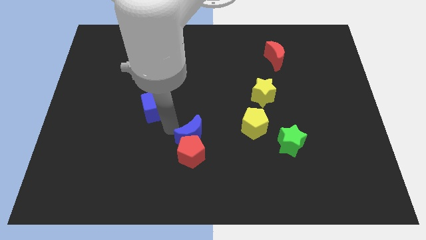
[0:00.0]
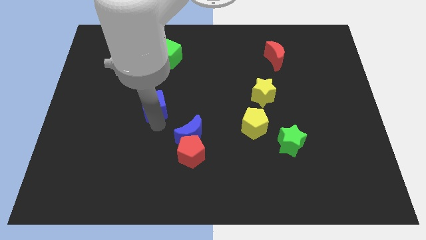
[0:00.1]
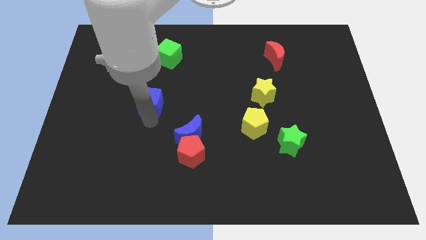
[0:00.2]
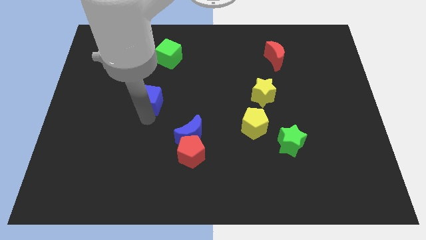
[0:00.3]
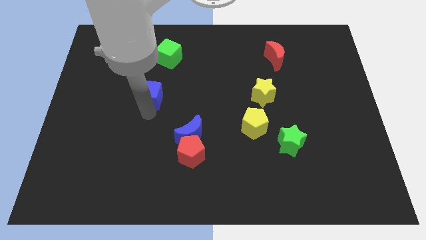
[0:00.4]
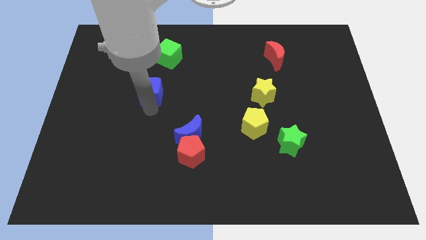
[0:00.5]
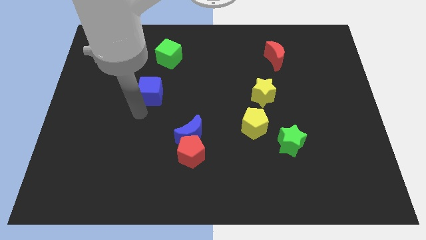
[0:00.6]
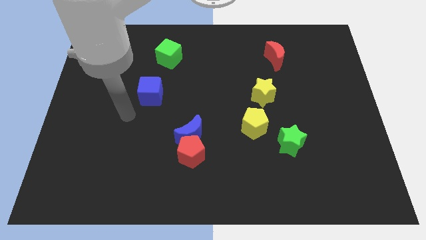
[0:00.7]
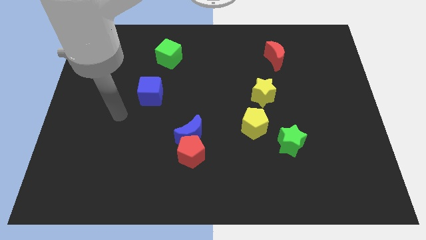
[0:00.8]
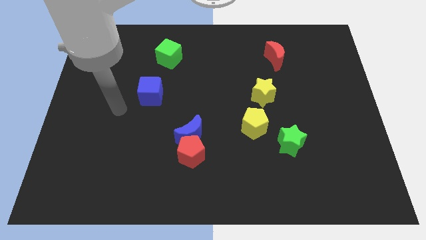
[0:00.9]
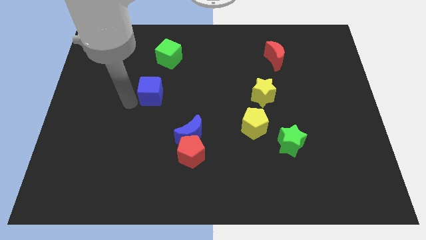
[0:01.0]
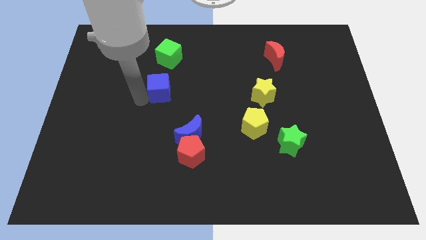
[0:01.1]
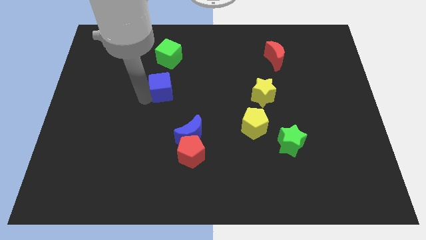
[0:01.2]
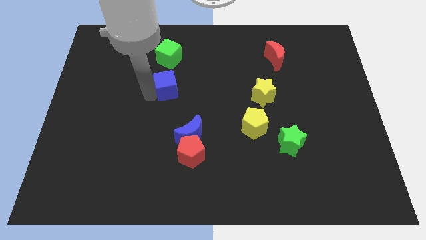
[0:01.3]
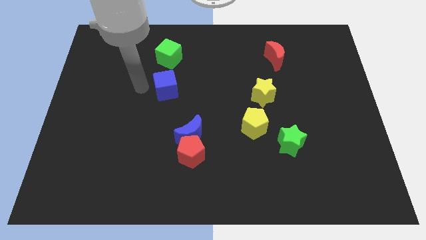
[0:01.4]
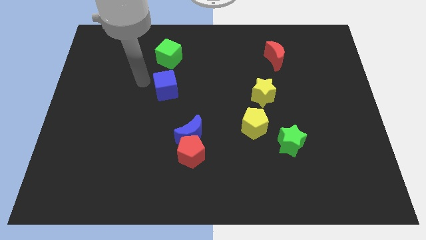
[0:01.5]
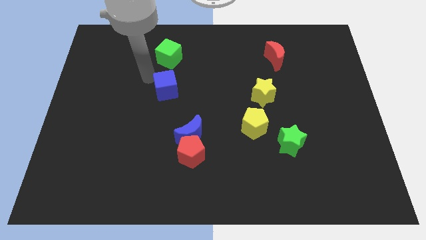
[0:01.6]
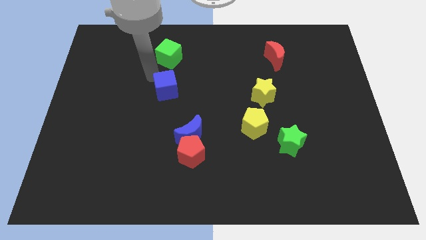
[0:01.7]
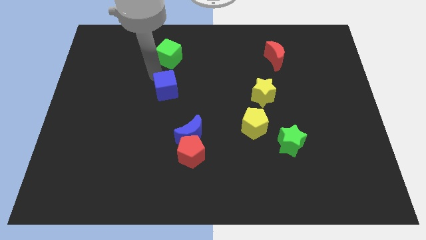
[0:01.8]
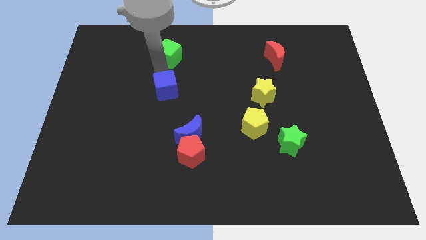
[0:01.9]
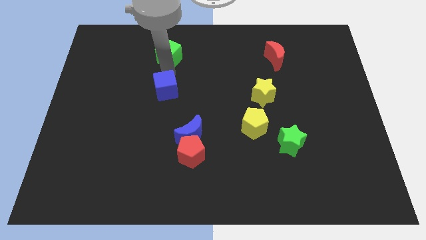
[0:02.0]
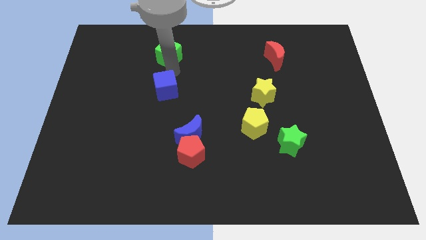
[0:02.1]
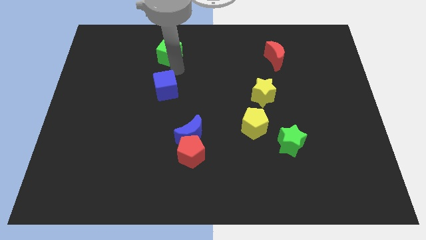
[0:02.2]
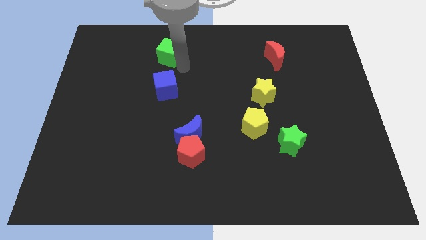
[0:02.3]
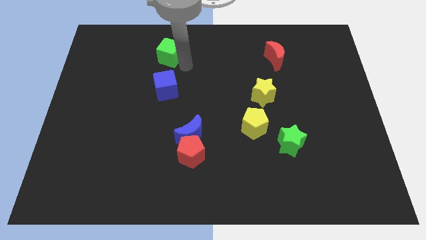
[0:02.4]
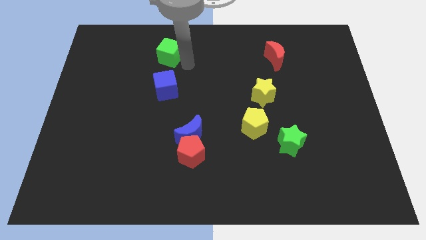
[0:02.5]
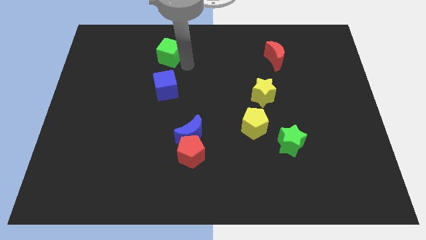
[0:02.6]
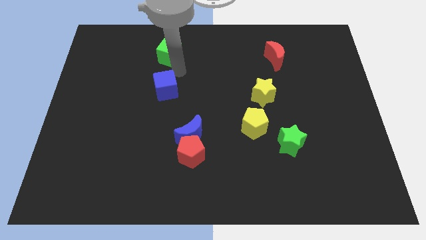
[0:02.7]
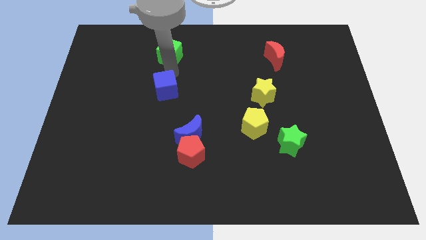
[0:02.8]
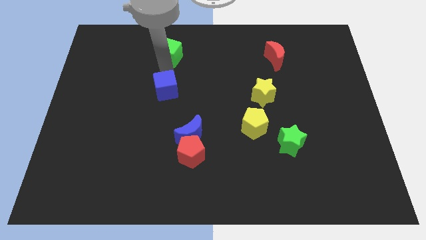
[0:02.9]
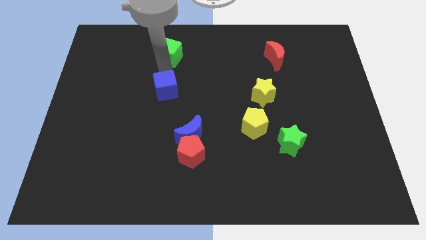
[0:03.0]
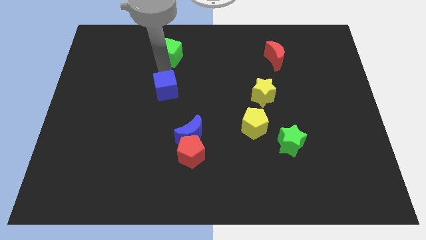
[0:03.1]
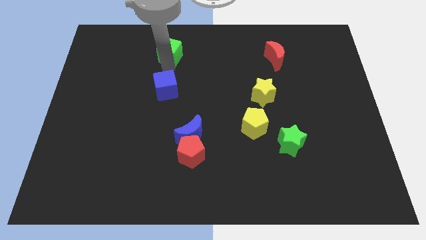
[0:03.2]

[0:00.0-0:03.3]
move the blue cube and the green cube slightly up

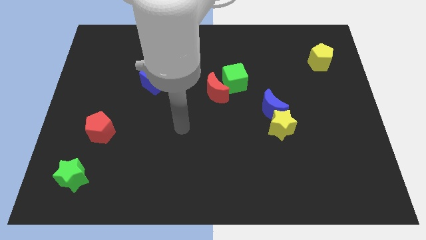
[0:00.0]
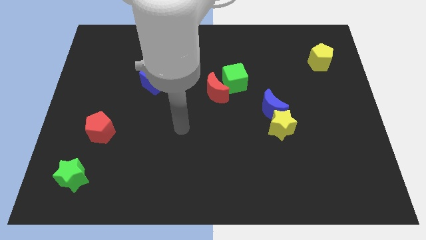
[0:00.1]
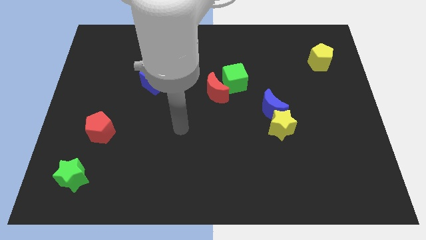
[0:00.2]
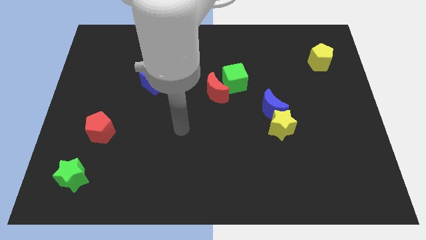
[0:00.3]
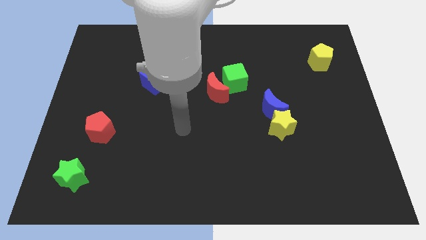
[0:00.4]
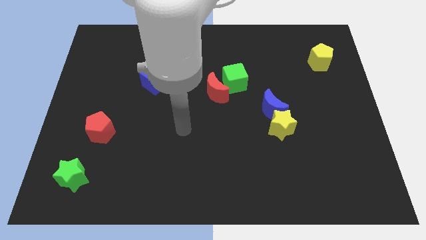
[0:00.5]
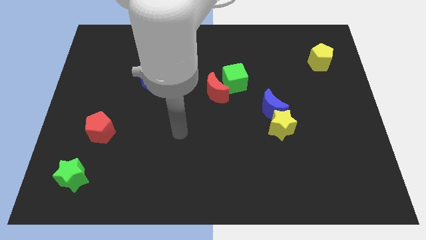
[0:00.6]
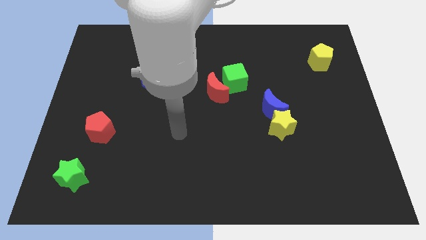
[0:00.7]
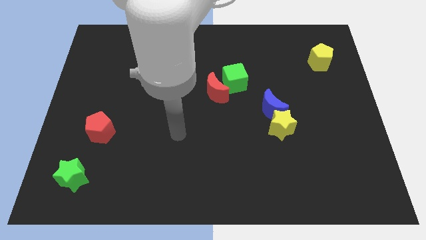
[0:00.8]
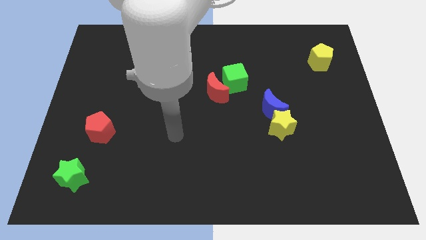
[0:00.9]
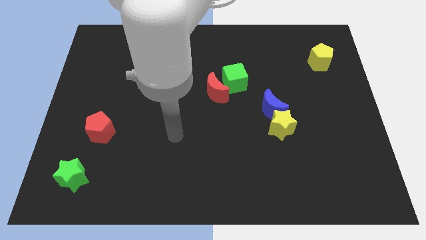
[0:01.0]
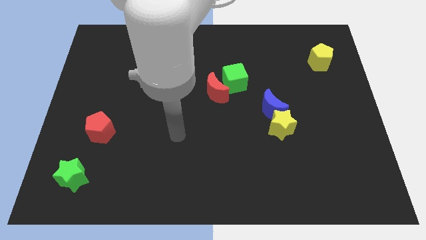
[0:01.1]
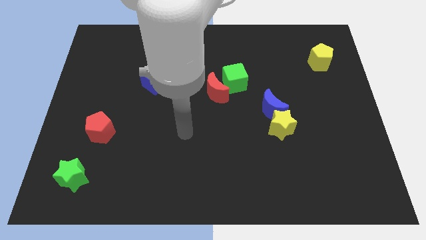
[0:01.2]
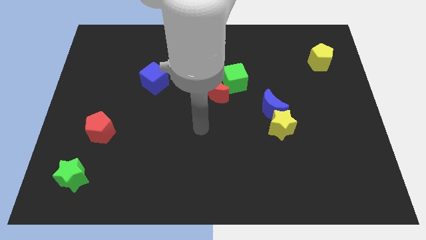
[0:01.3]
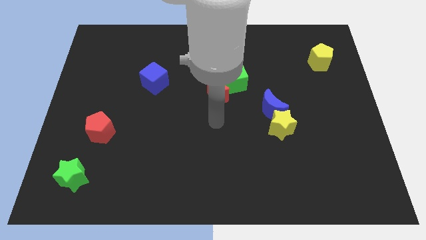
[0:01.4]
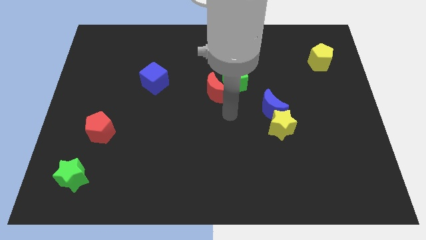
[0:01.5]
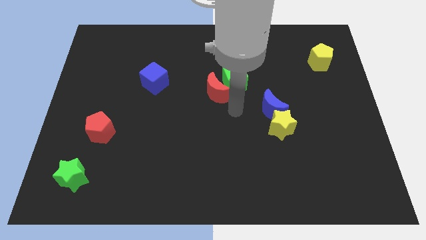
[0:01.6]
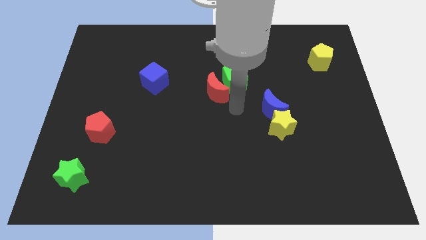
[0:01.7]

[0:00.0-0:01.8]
move your arm towards the red moon

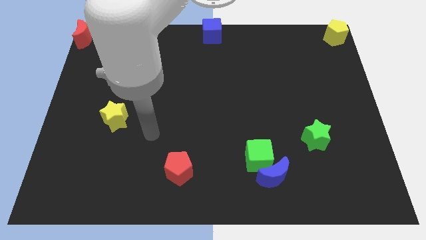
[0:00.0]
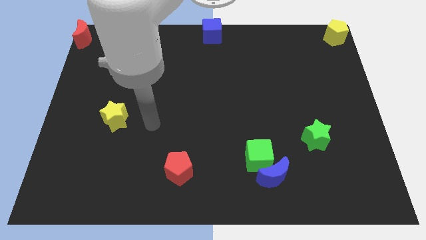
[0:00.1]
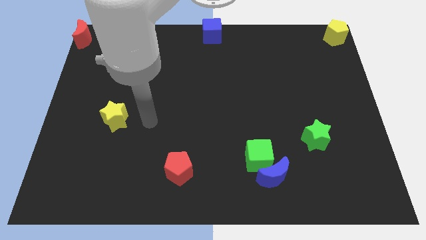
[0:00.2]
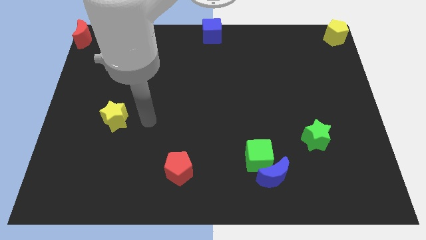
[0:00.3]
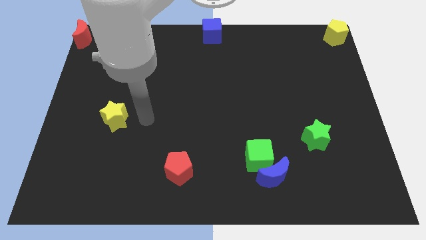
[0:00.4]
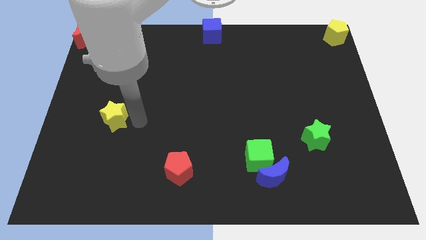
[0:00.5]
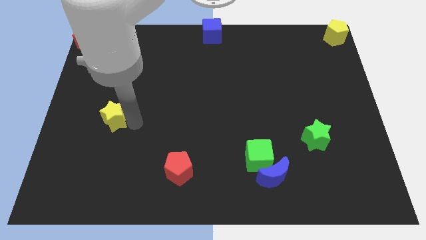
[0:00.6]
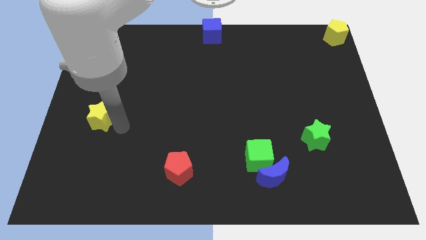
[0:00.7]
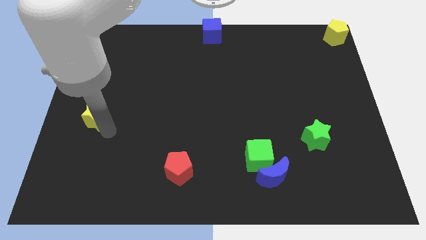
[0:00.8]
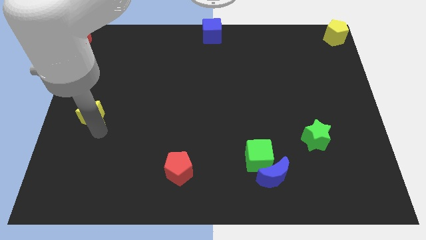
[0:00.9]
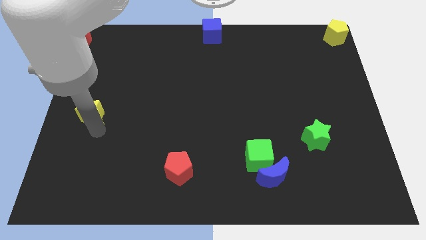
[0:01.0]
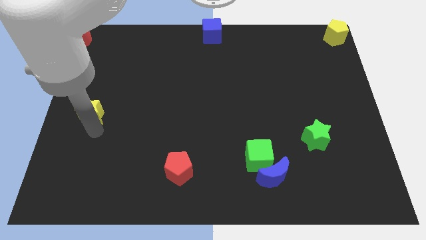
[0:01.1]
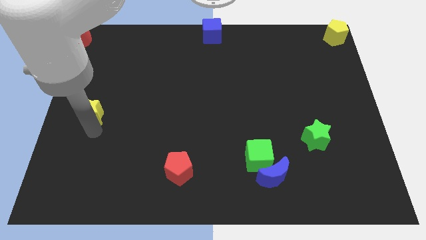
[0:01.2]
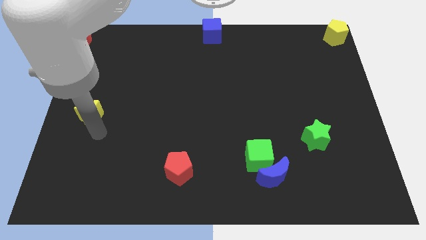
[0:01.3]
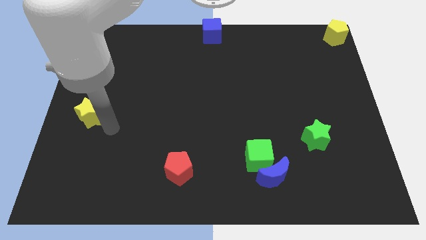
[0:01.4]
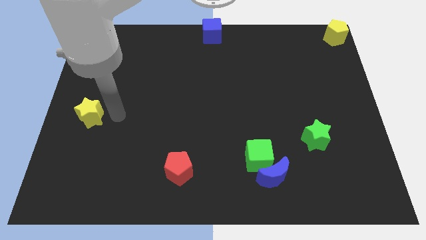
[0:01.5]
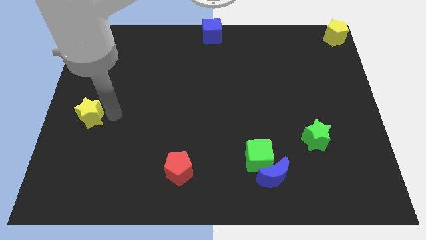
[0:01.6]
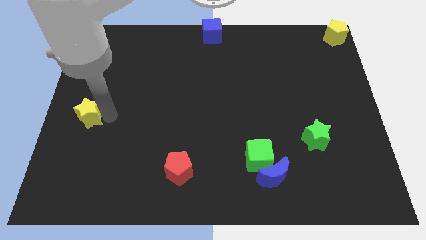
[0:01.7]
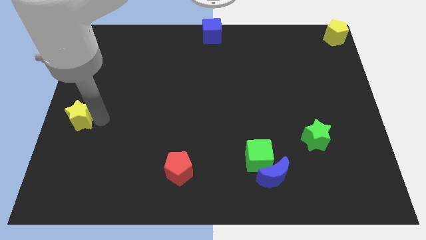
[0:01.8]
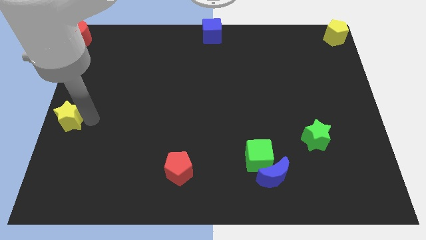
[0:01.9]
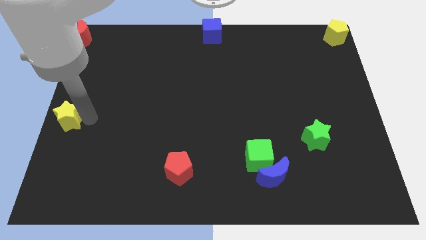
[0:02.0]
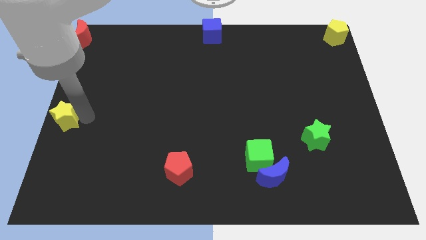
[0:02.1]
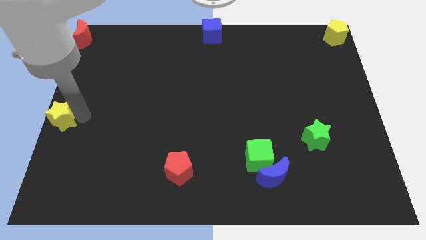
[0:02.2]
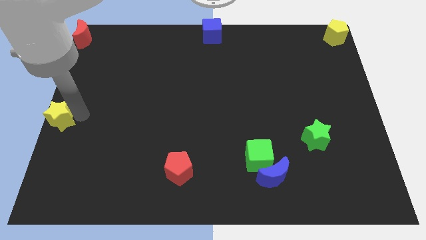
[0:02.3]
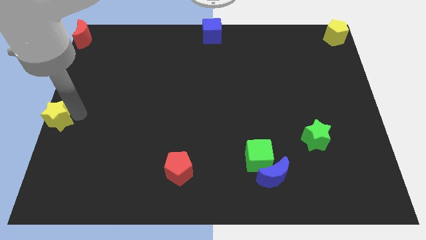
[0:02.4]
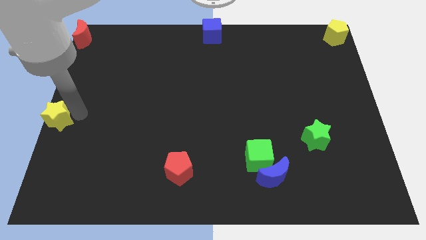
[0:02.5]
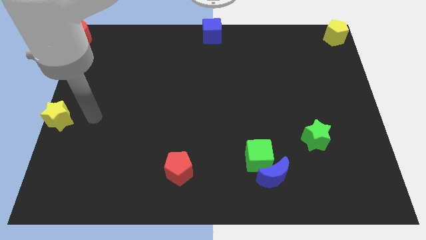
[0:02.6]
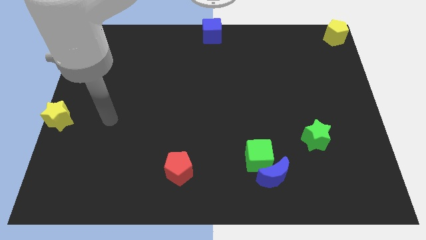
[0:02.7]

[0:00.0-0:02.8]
place the yellow star below the red moon vertically

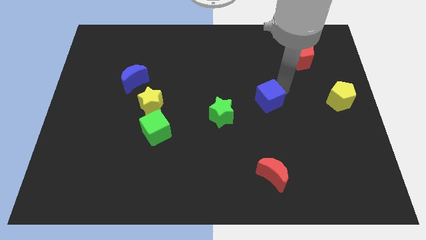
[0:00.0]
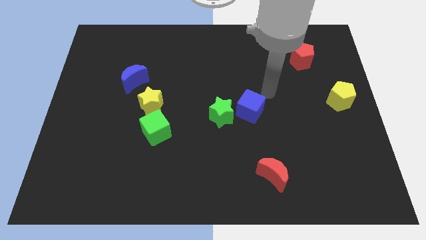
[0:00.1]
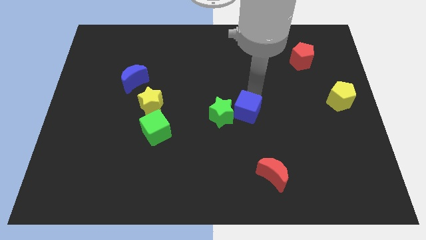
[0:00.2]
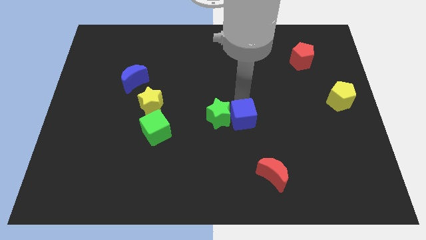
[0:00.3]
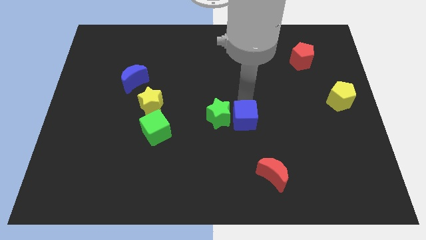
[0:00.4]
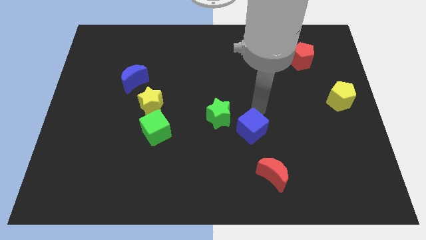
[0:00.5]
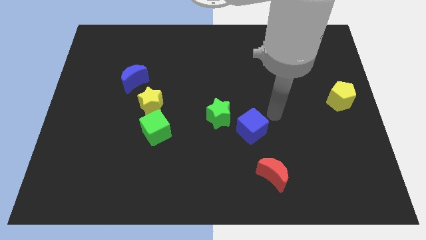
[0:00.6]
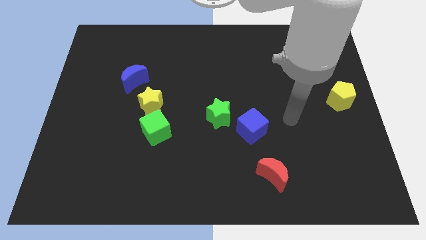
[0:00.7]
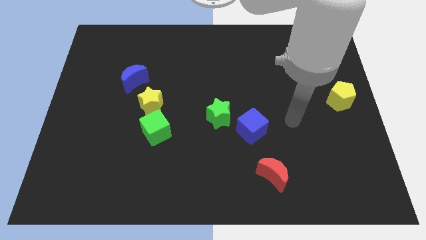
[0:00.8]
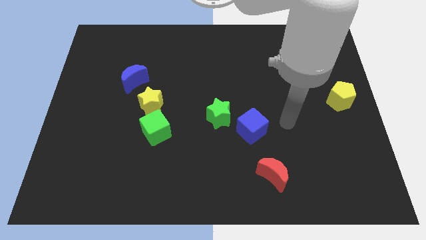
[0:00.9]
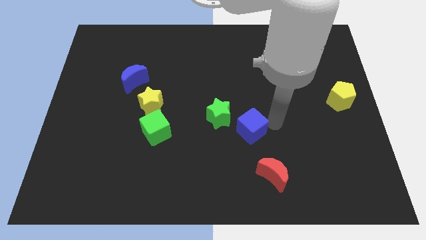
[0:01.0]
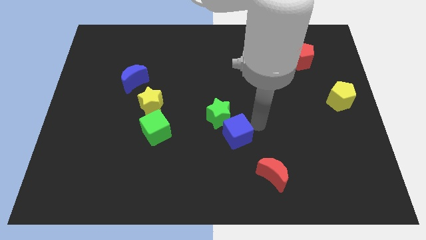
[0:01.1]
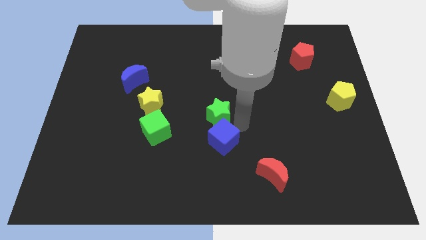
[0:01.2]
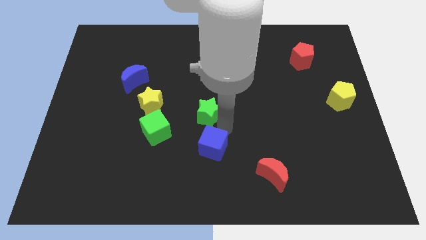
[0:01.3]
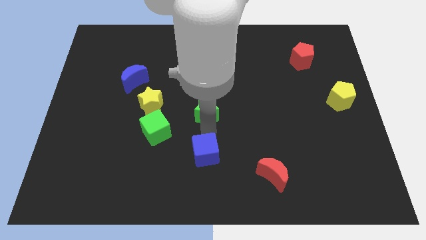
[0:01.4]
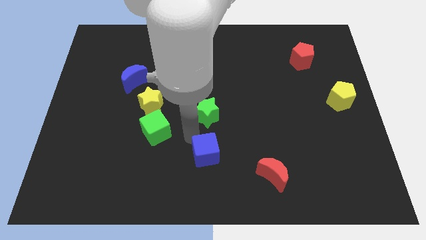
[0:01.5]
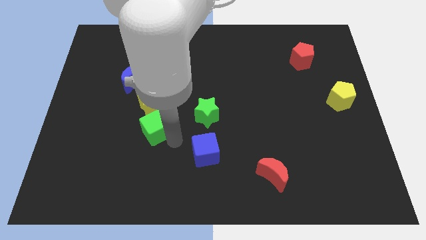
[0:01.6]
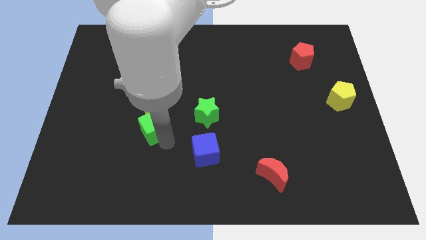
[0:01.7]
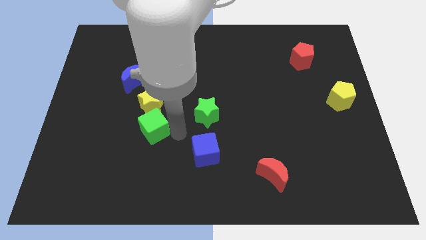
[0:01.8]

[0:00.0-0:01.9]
move the blue cube below the green star
